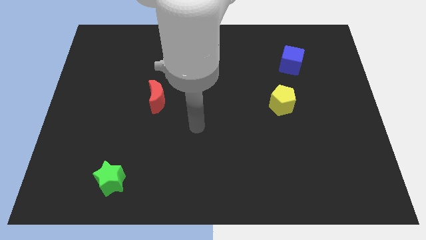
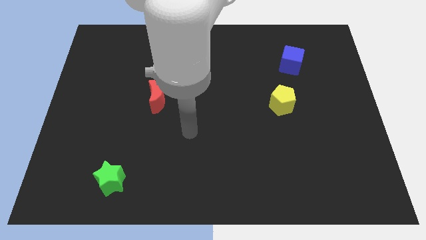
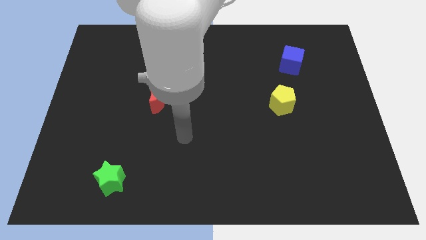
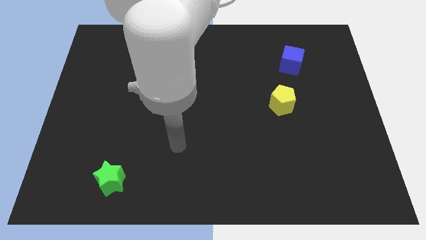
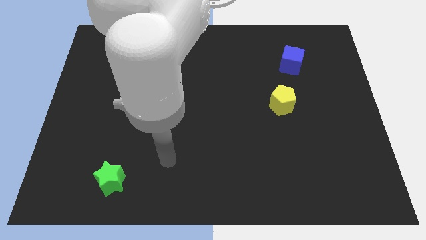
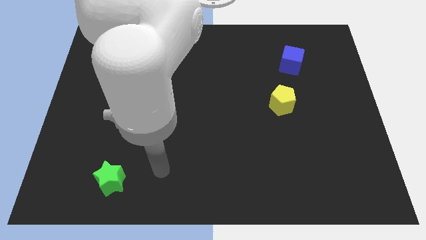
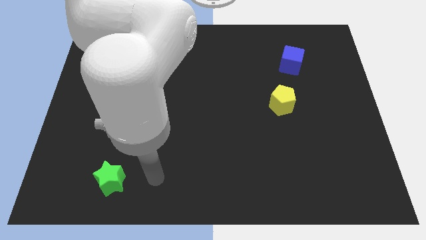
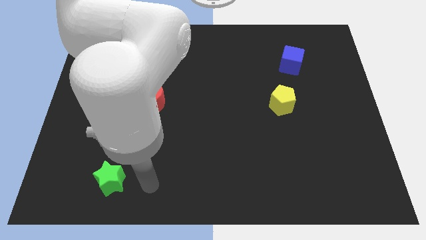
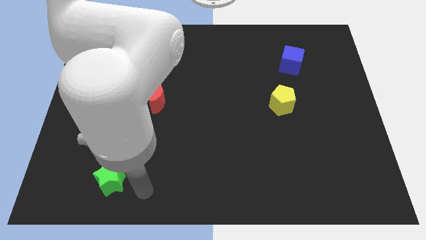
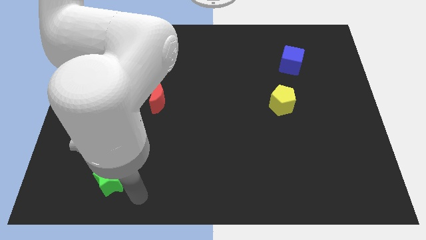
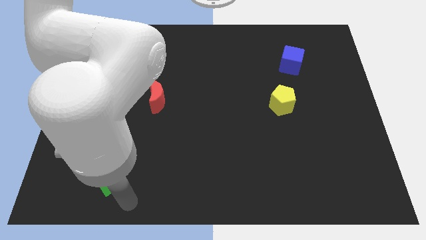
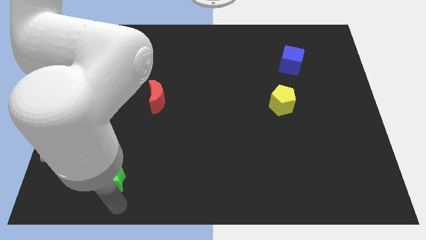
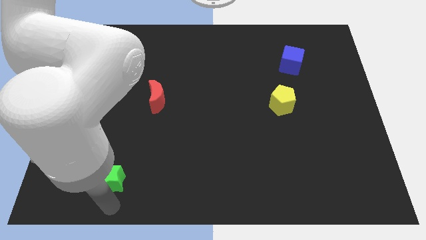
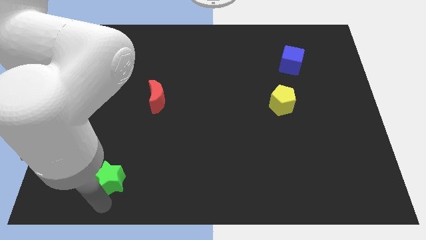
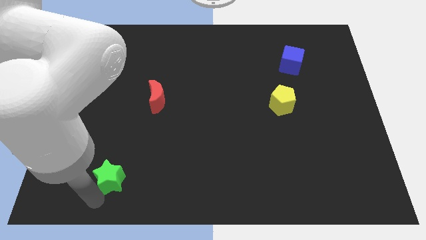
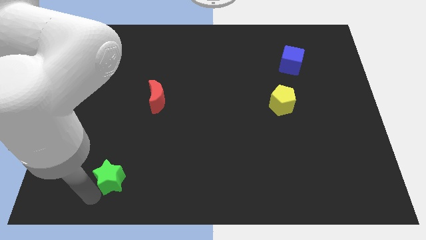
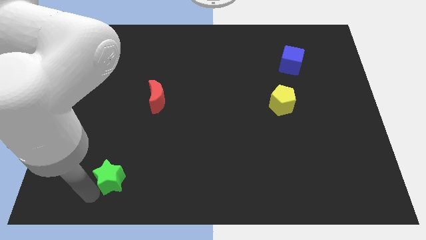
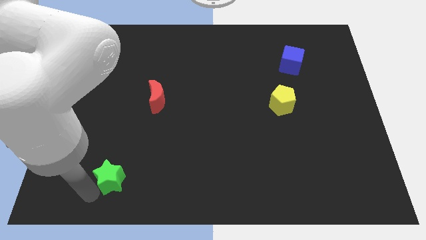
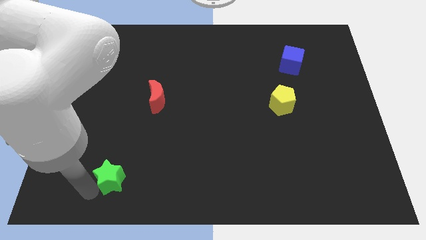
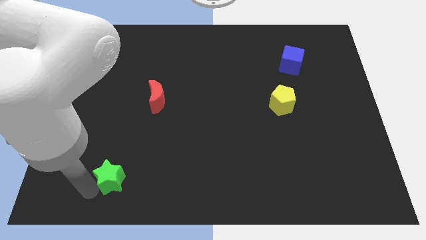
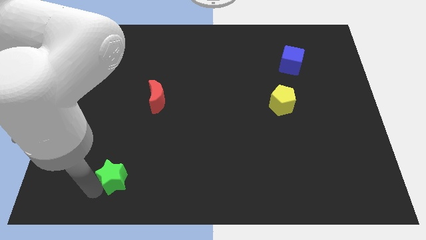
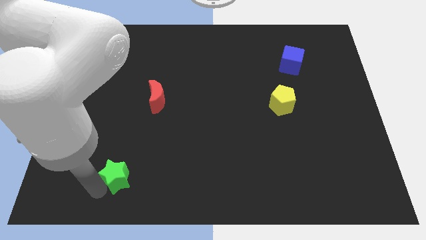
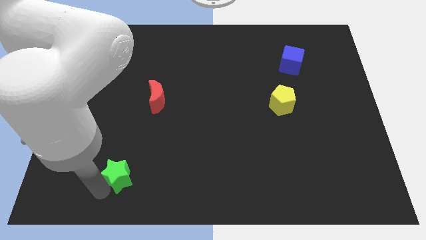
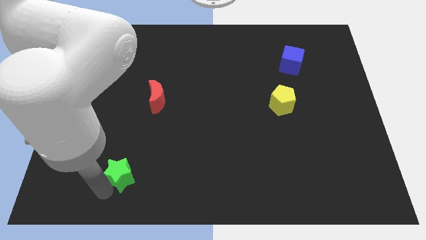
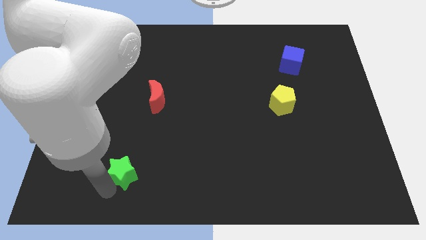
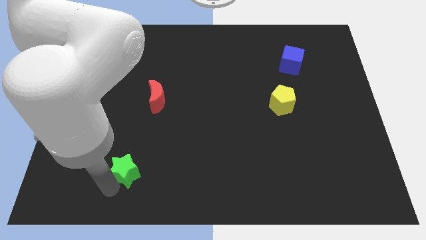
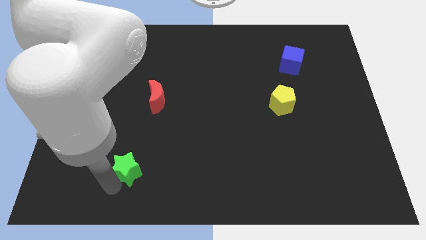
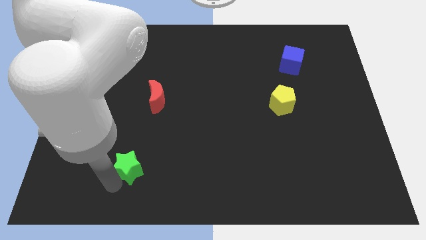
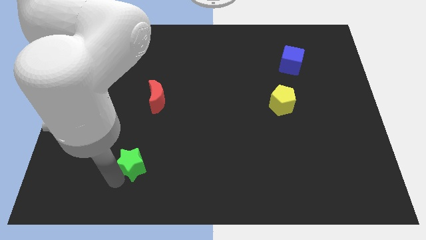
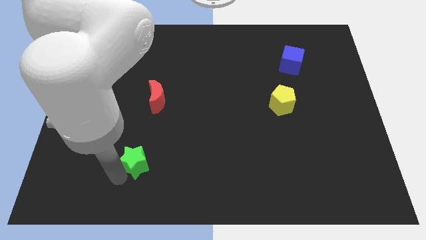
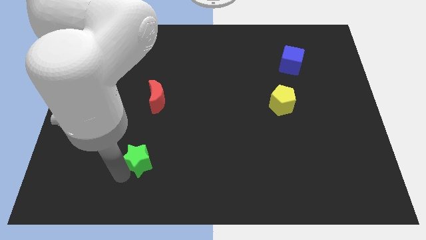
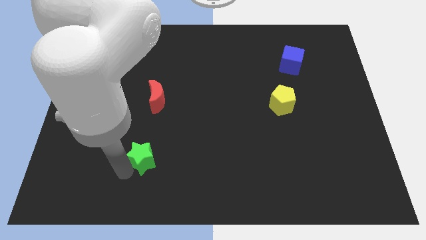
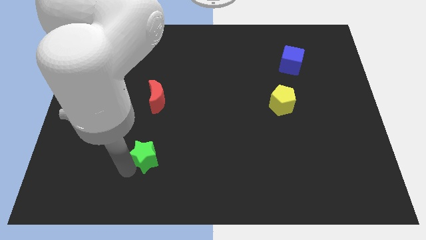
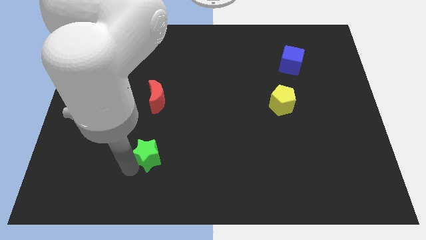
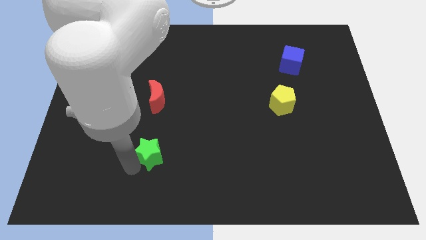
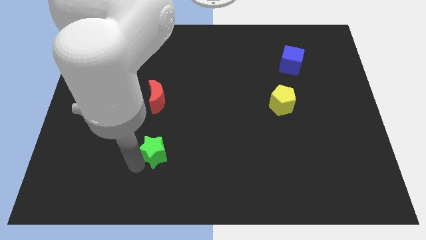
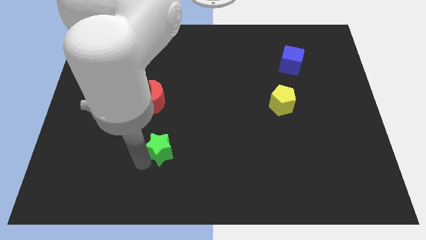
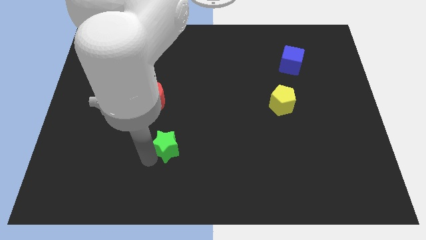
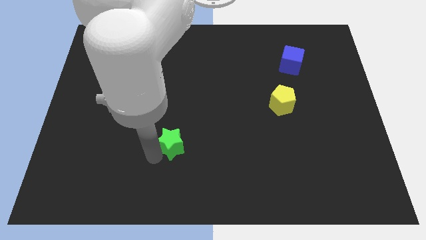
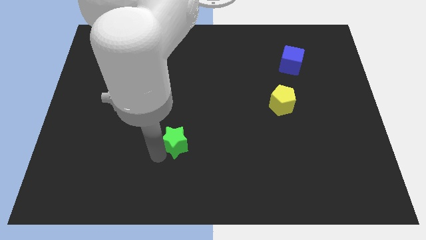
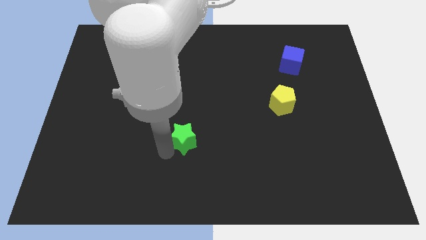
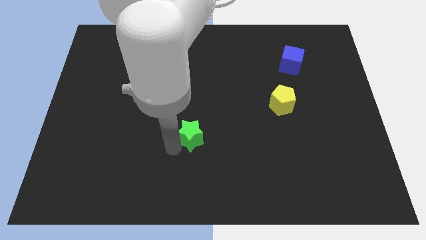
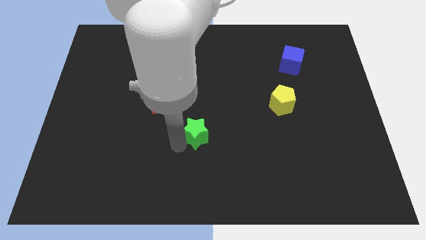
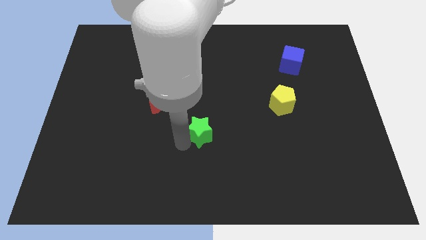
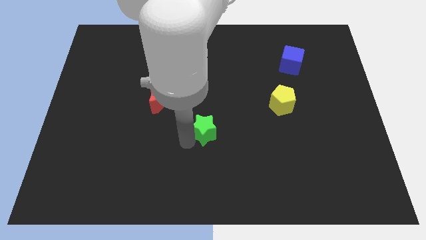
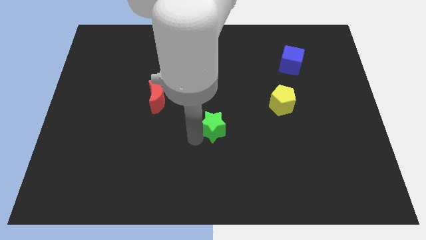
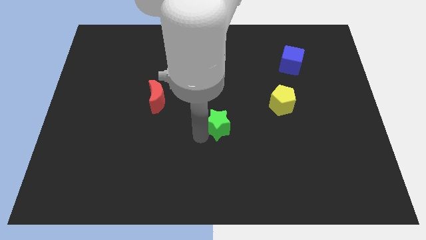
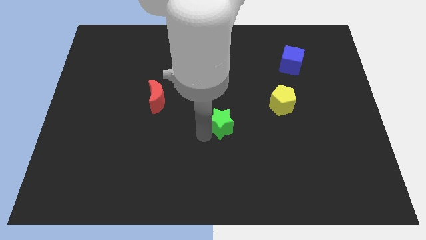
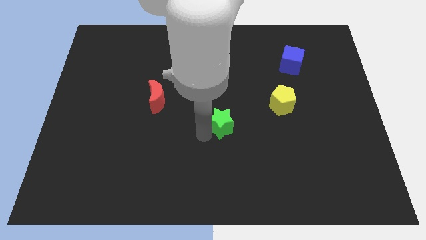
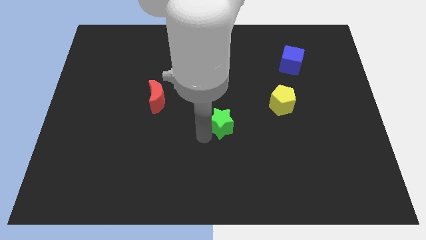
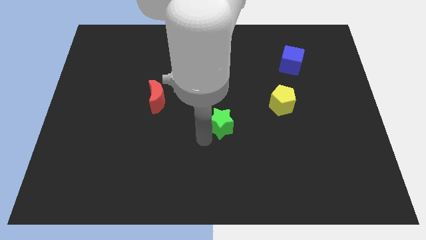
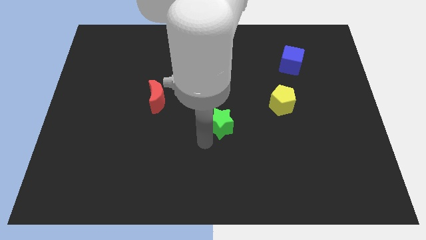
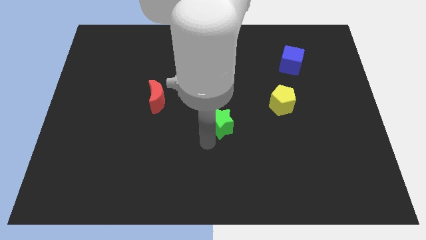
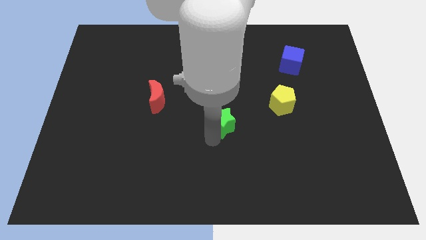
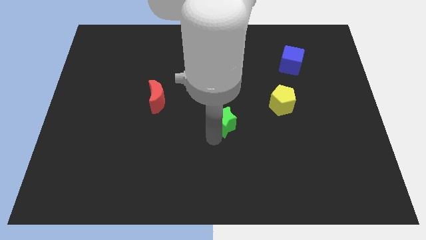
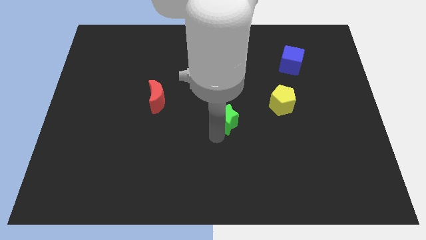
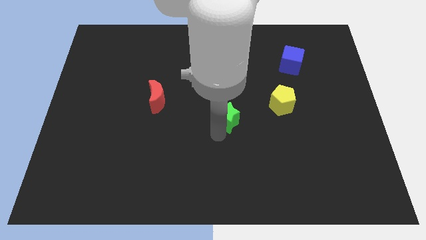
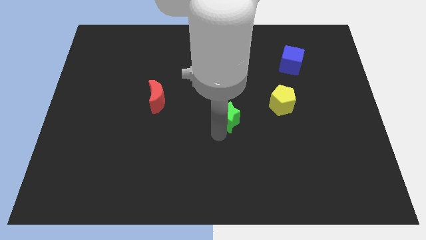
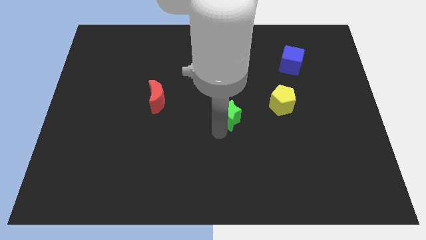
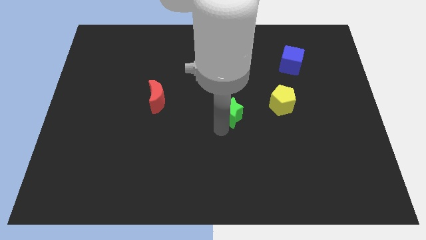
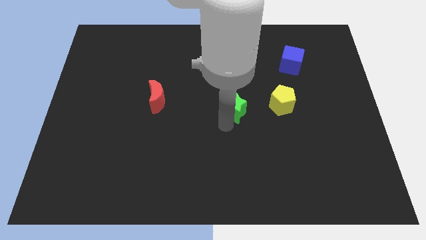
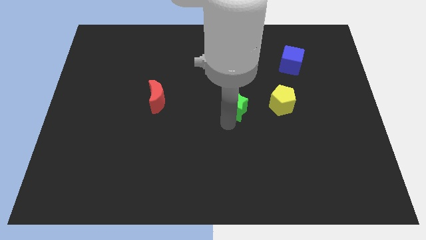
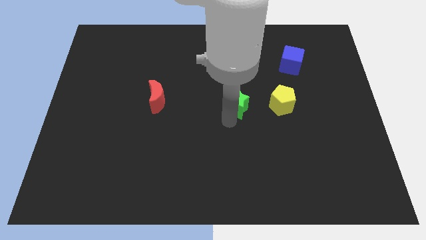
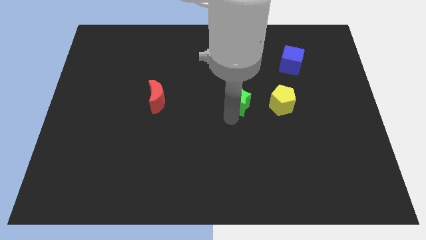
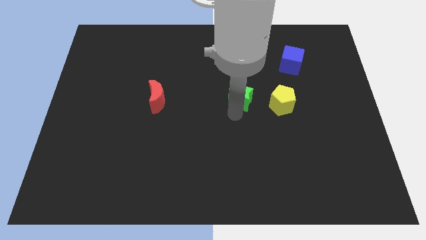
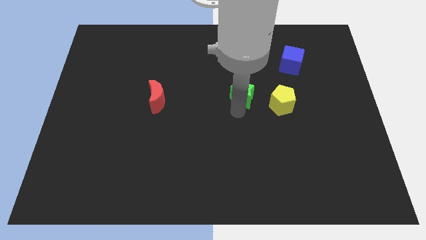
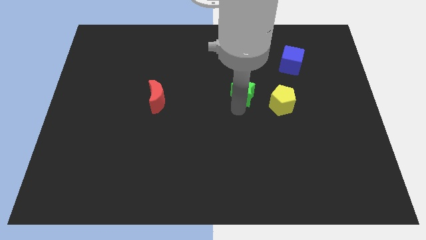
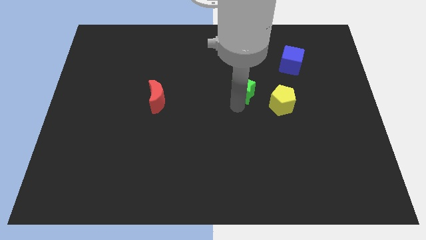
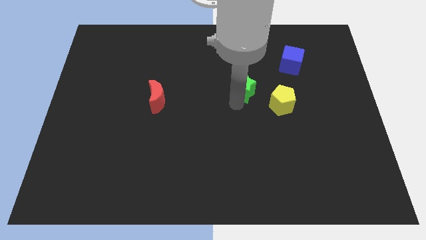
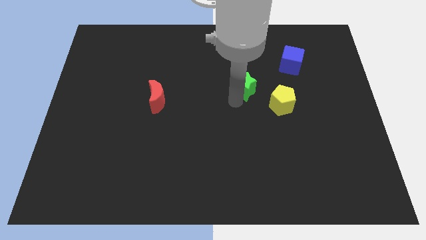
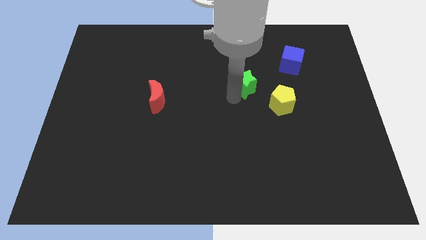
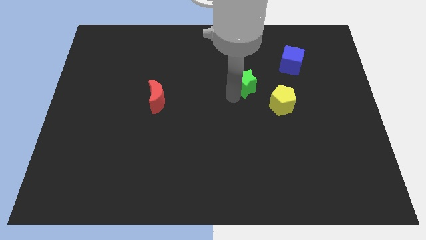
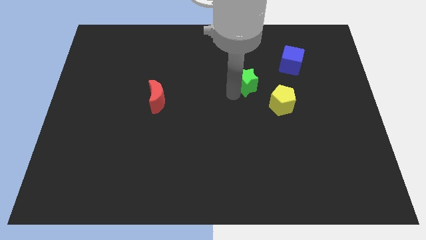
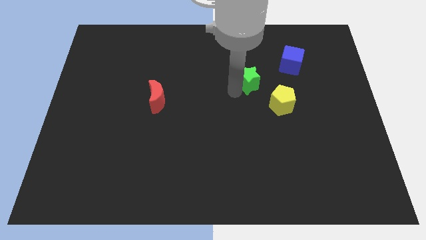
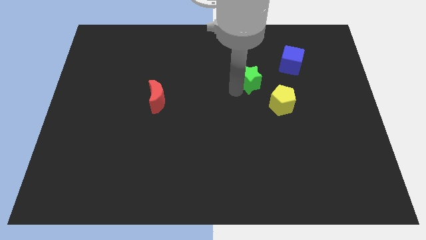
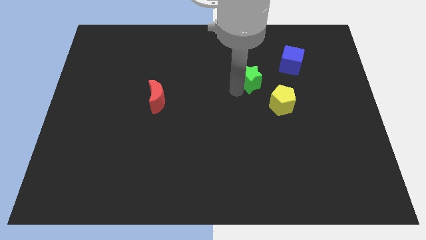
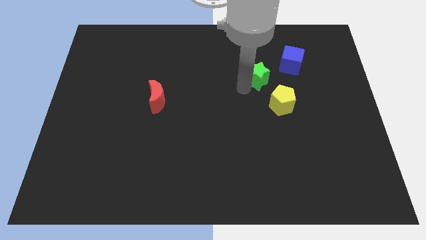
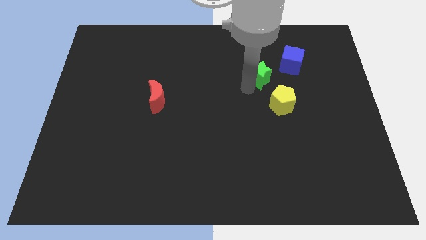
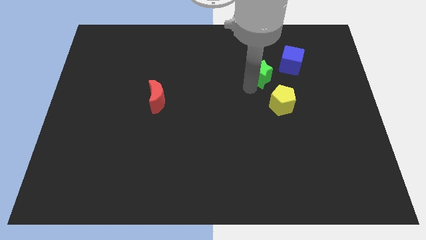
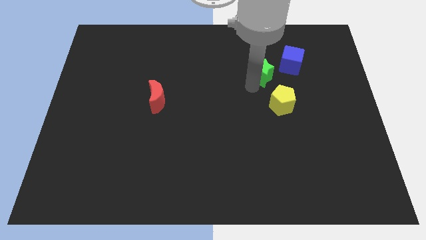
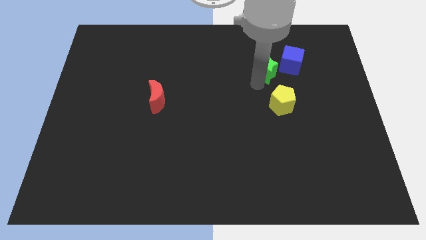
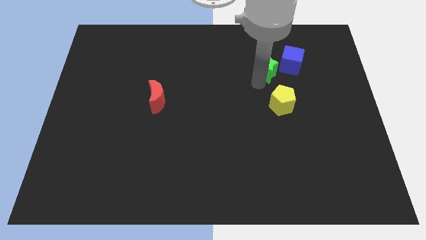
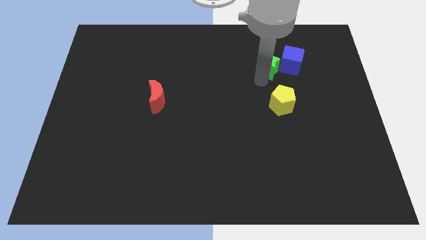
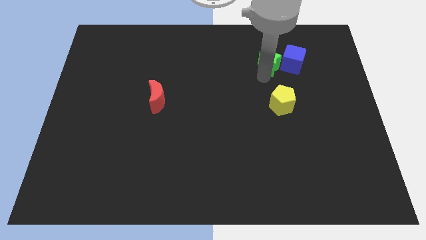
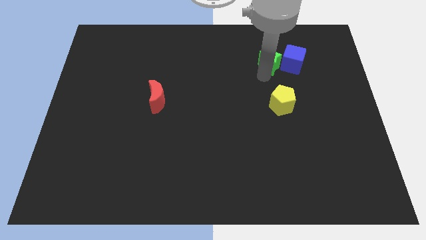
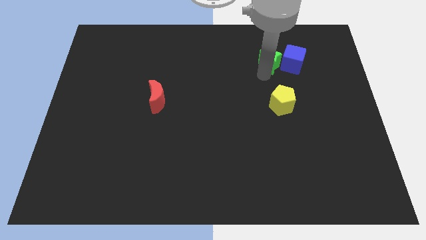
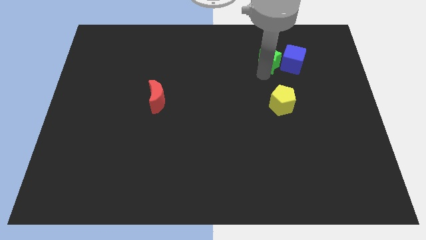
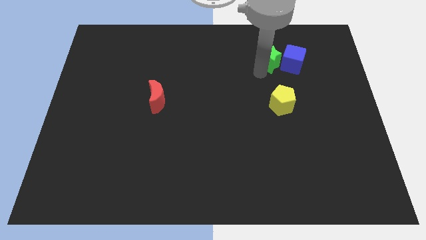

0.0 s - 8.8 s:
push the green star close to the cube
